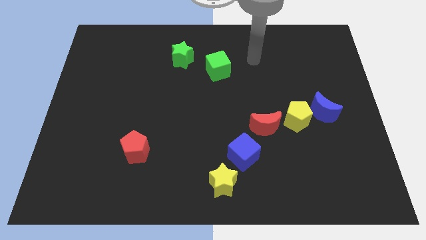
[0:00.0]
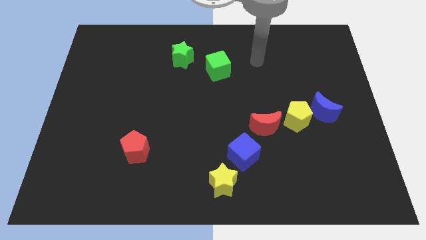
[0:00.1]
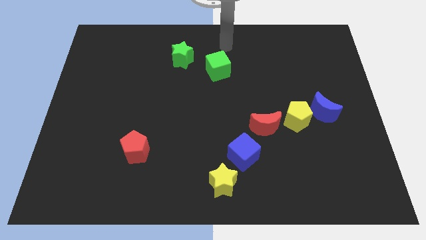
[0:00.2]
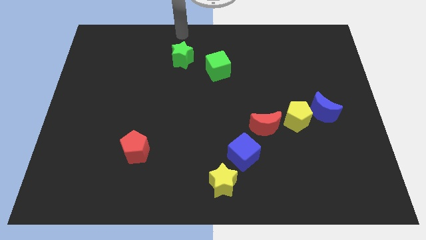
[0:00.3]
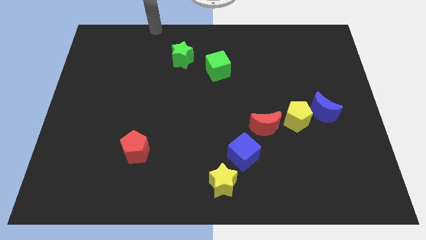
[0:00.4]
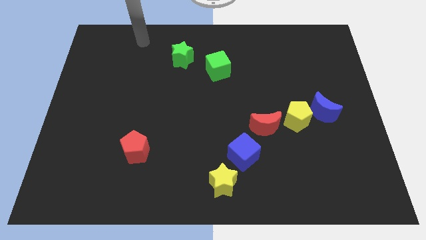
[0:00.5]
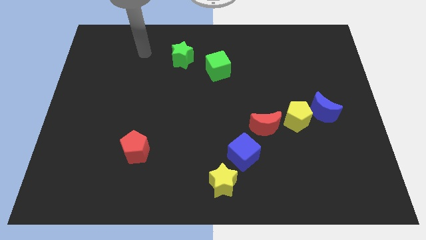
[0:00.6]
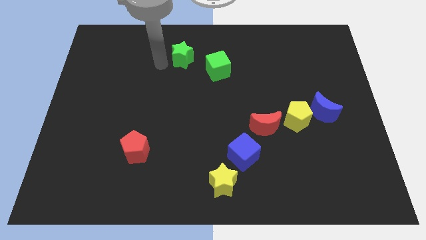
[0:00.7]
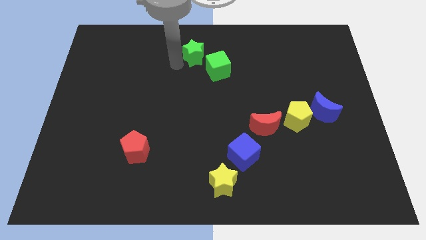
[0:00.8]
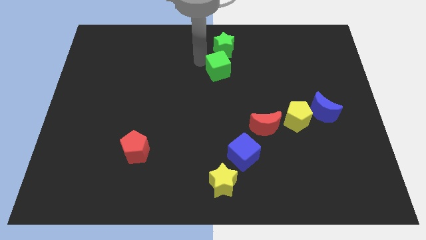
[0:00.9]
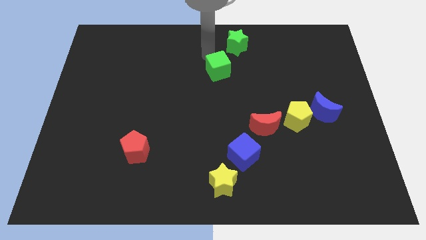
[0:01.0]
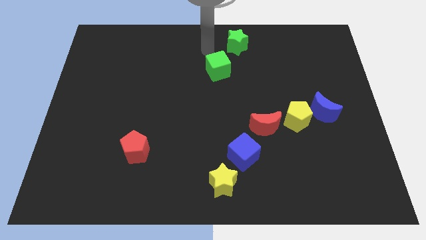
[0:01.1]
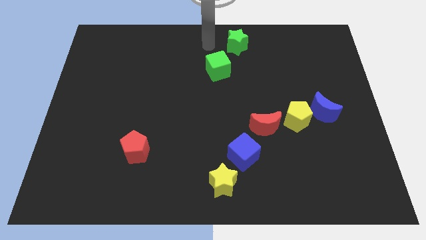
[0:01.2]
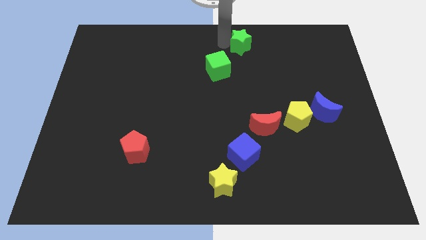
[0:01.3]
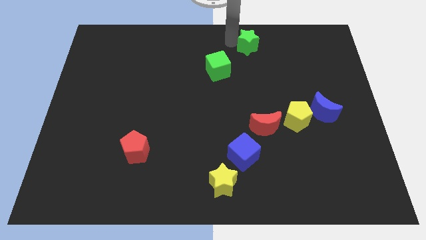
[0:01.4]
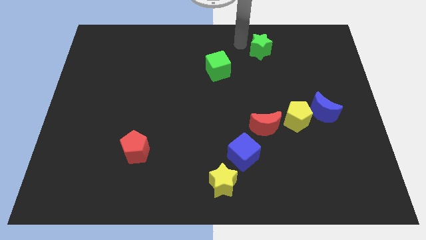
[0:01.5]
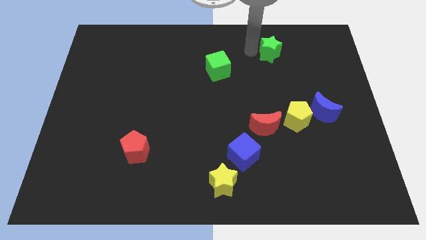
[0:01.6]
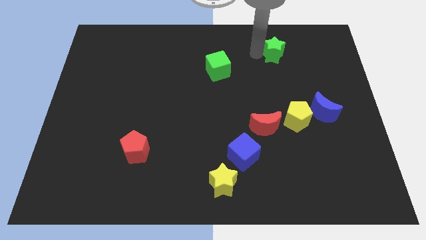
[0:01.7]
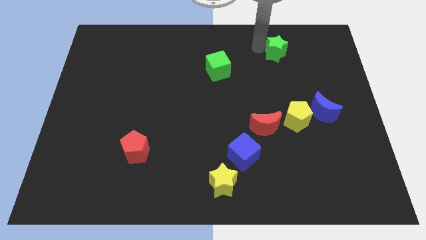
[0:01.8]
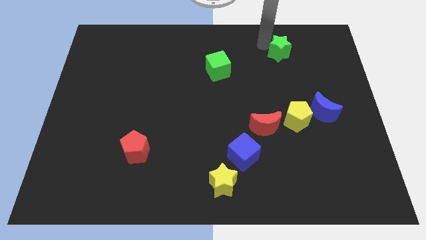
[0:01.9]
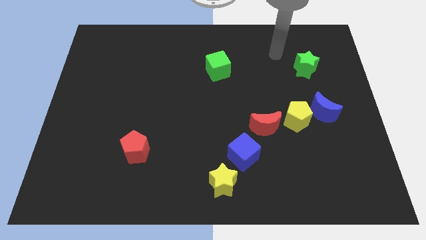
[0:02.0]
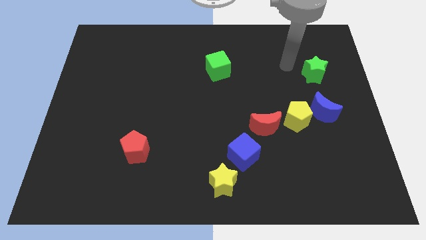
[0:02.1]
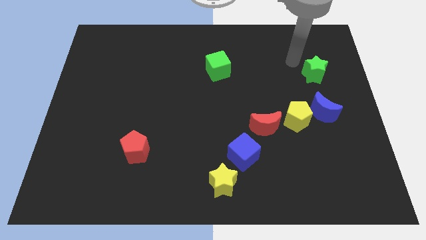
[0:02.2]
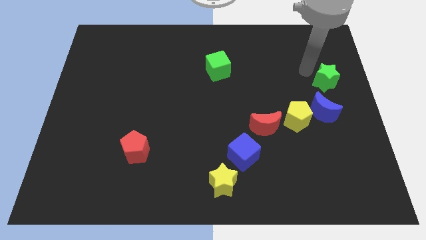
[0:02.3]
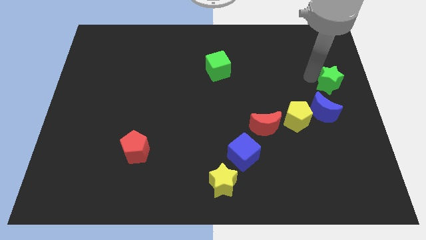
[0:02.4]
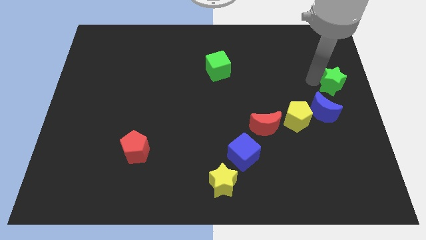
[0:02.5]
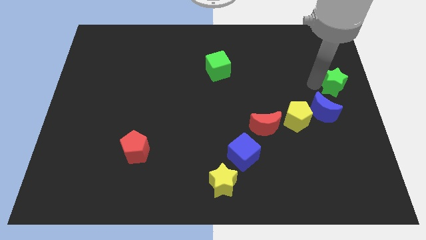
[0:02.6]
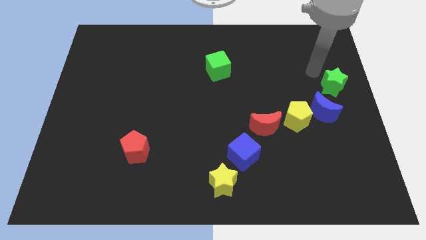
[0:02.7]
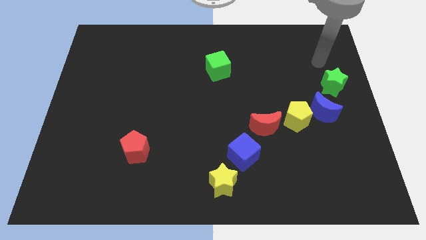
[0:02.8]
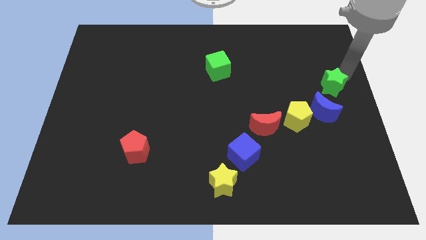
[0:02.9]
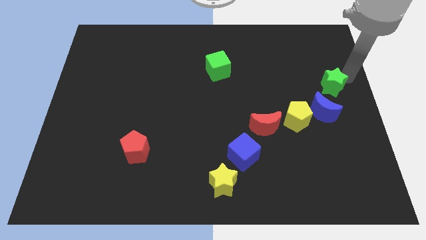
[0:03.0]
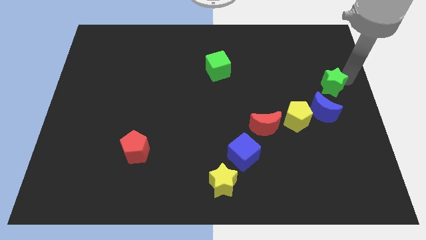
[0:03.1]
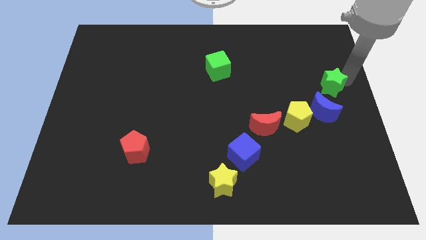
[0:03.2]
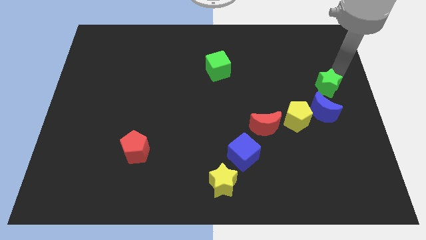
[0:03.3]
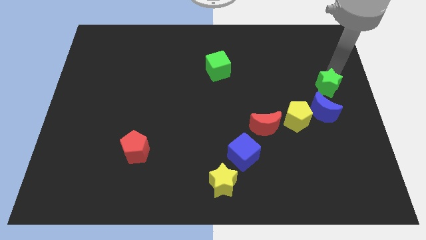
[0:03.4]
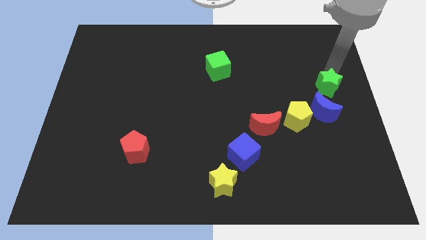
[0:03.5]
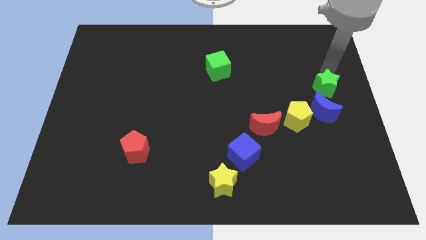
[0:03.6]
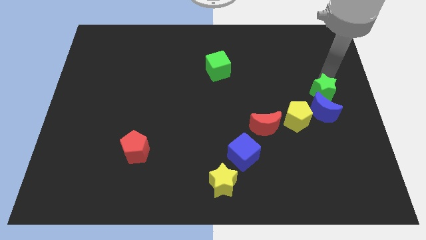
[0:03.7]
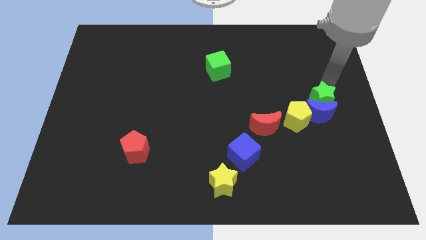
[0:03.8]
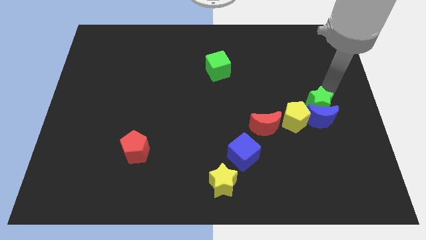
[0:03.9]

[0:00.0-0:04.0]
move the green star next to the blue moon

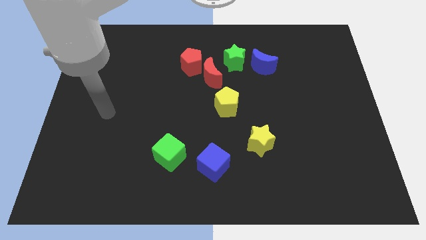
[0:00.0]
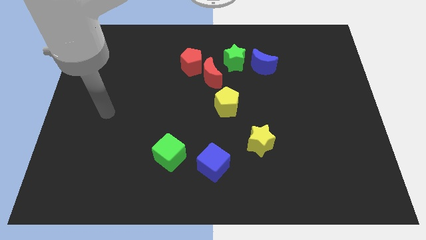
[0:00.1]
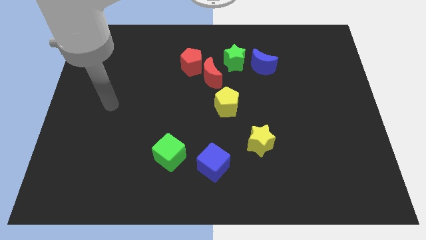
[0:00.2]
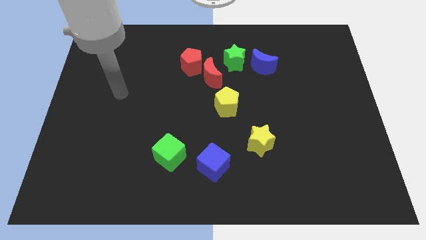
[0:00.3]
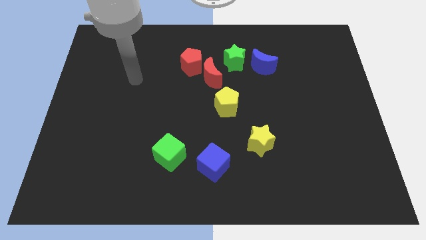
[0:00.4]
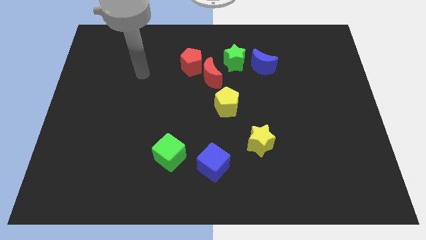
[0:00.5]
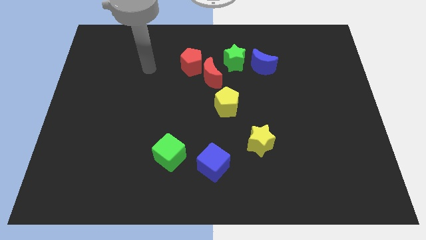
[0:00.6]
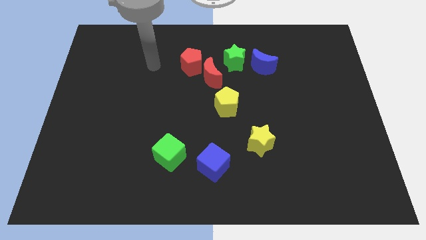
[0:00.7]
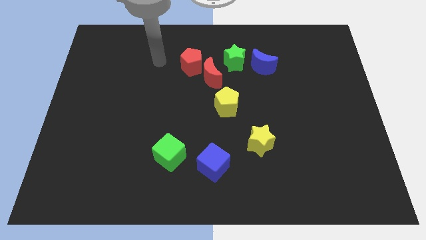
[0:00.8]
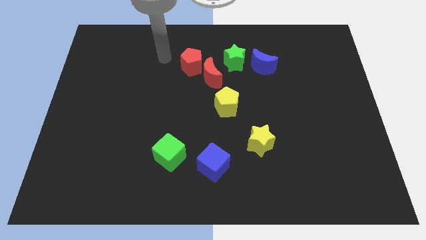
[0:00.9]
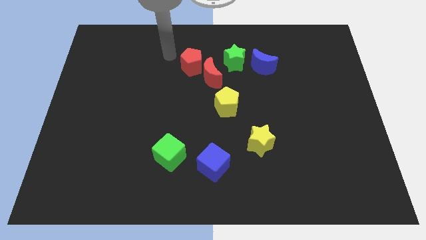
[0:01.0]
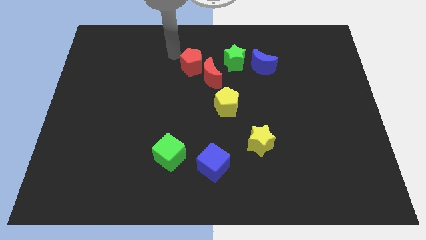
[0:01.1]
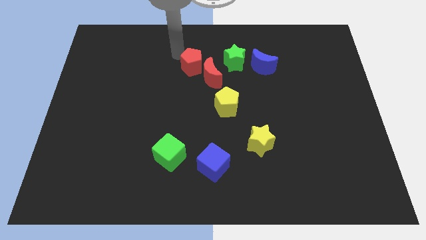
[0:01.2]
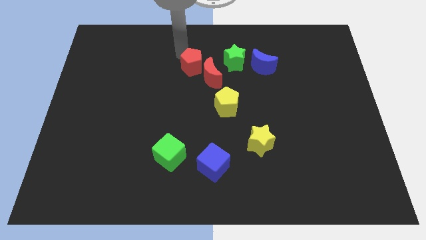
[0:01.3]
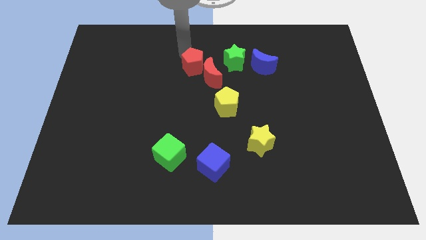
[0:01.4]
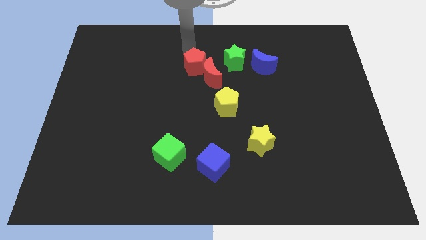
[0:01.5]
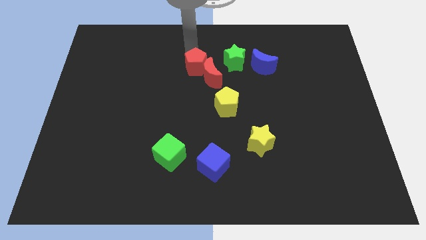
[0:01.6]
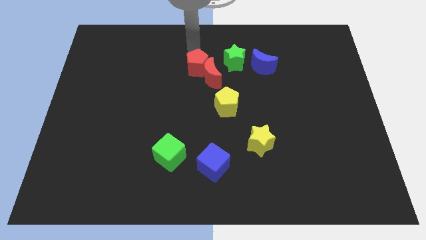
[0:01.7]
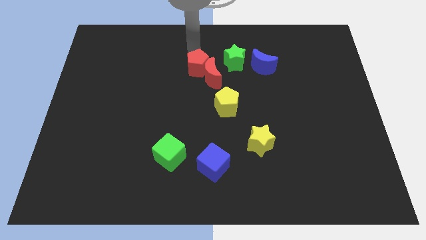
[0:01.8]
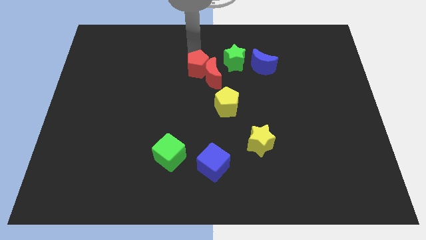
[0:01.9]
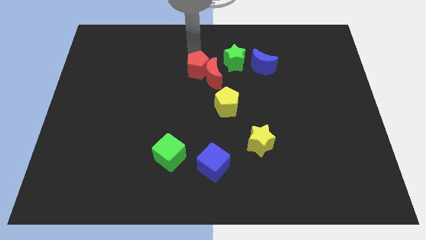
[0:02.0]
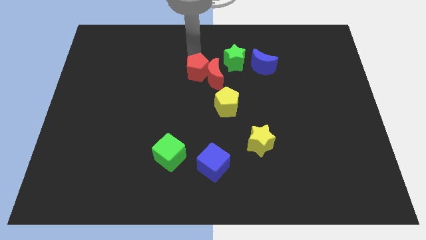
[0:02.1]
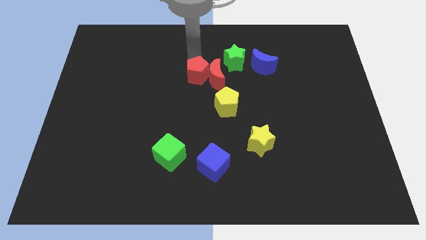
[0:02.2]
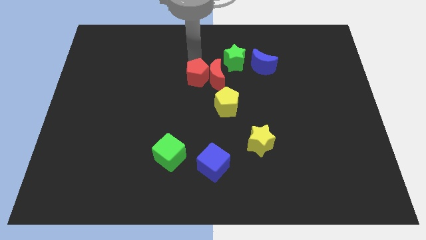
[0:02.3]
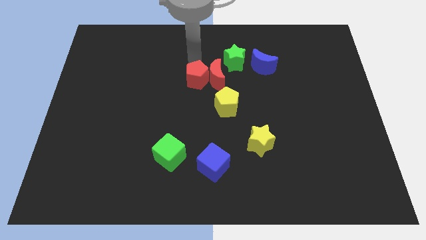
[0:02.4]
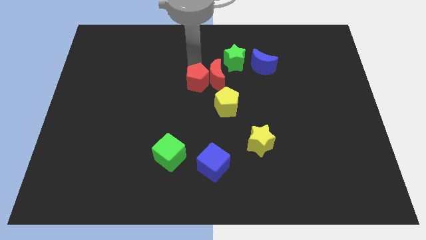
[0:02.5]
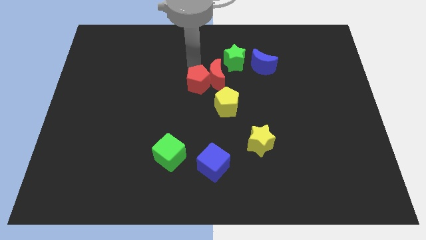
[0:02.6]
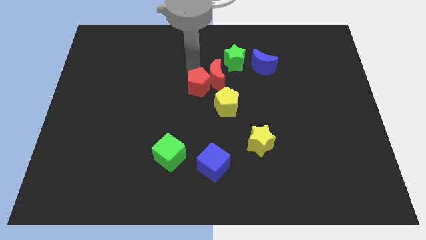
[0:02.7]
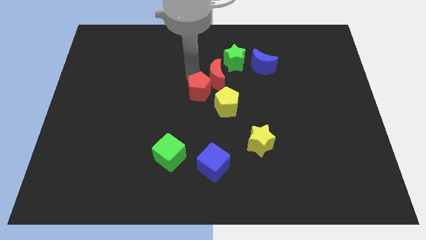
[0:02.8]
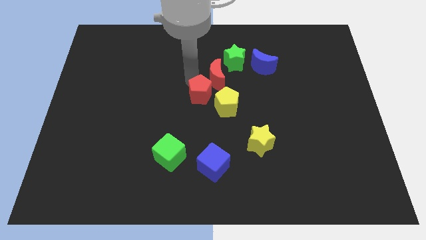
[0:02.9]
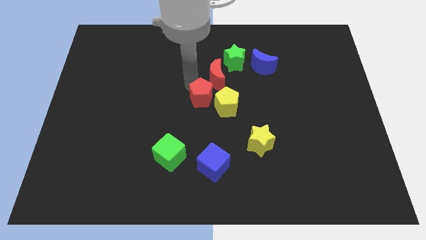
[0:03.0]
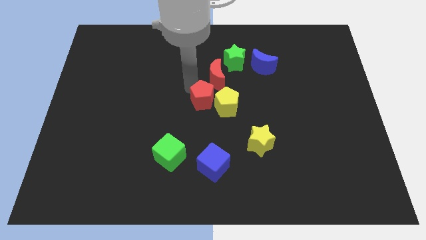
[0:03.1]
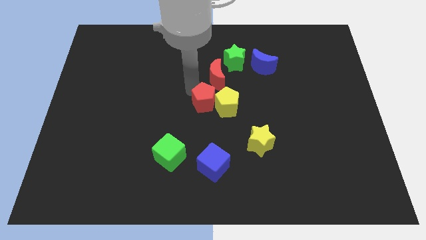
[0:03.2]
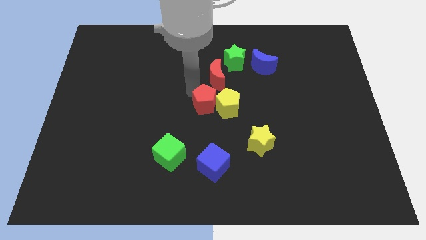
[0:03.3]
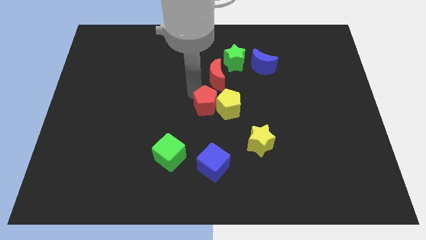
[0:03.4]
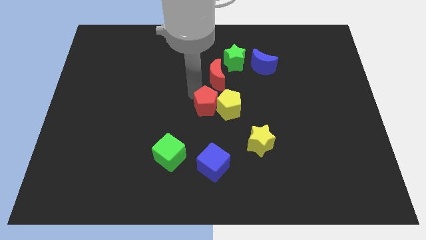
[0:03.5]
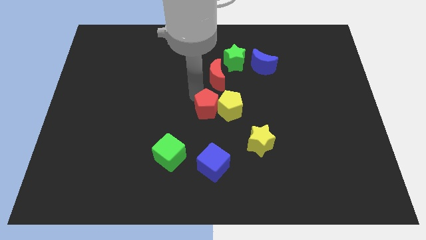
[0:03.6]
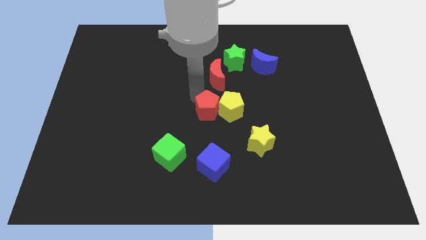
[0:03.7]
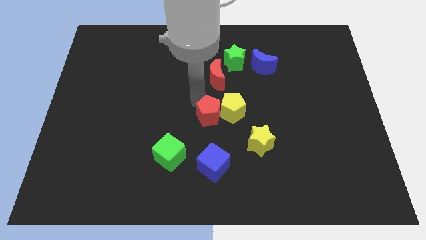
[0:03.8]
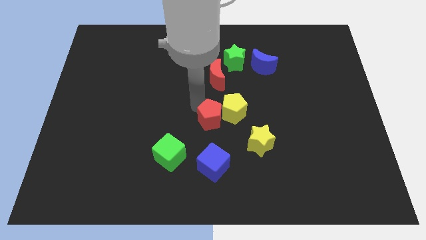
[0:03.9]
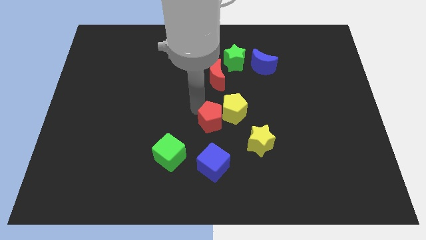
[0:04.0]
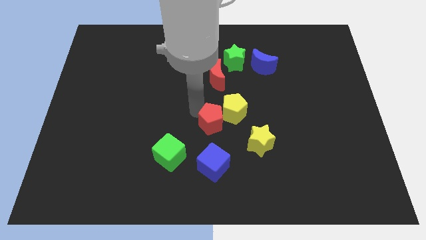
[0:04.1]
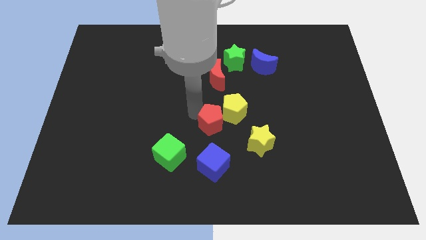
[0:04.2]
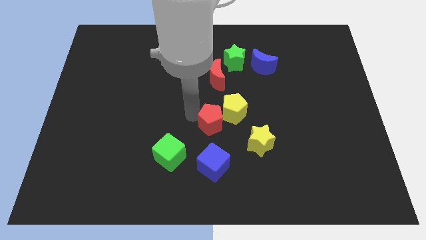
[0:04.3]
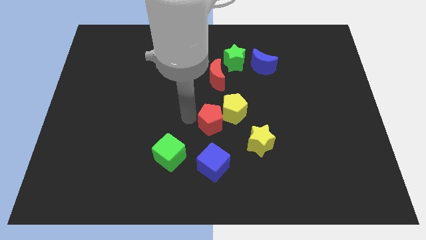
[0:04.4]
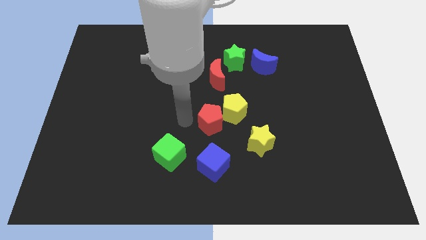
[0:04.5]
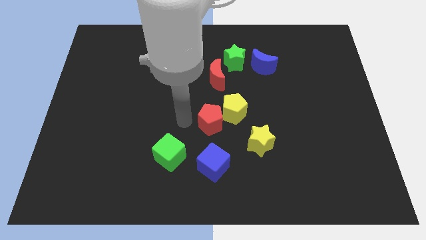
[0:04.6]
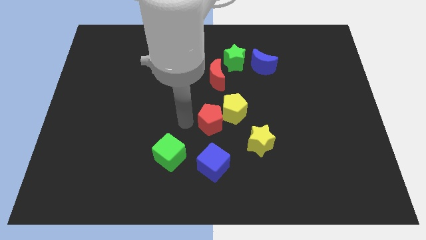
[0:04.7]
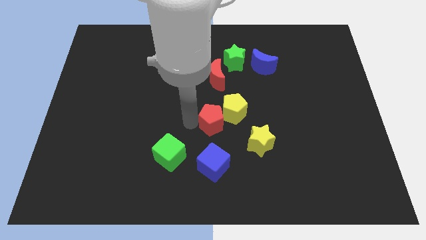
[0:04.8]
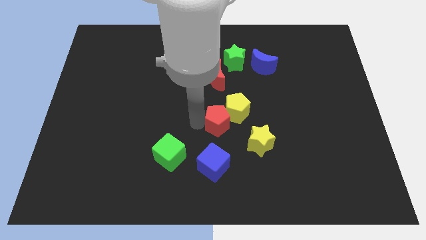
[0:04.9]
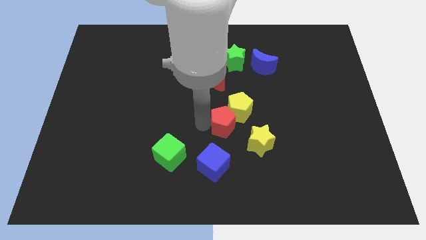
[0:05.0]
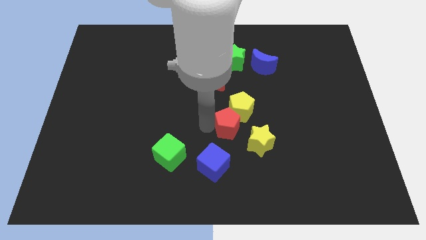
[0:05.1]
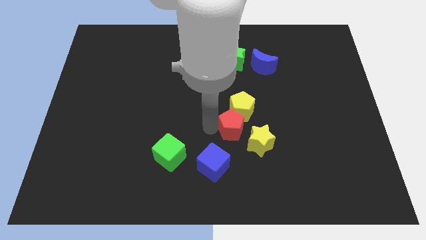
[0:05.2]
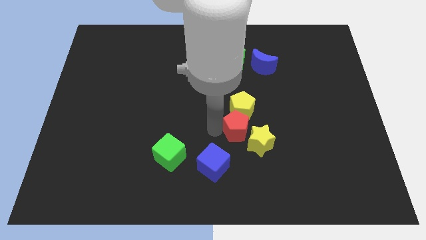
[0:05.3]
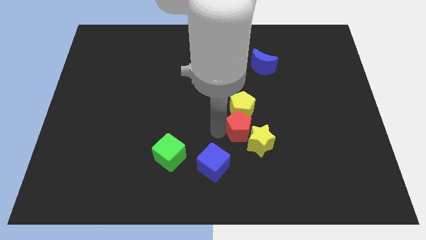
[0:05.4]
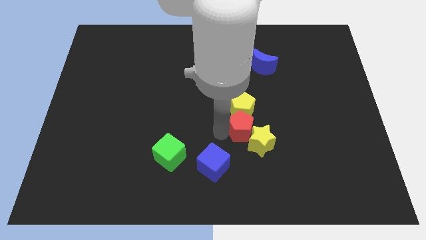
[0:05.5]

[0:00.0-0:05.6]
push the red pentagon next to the yellow star
